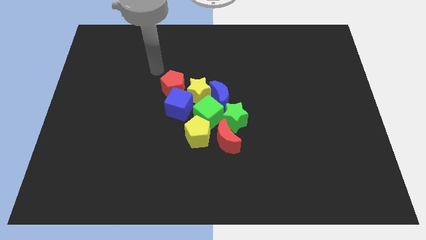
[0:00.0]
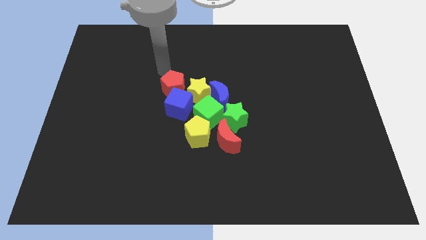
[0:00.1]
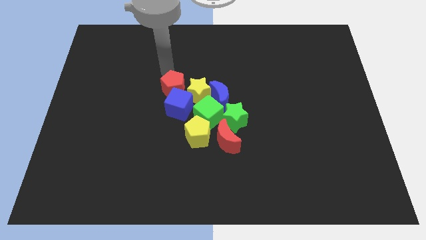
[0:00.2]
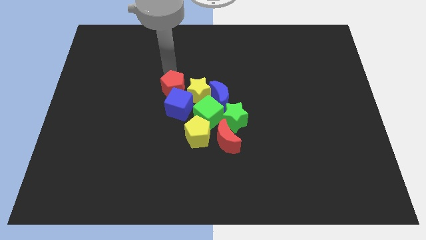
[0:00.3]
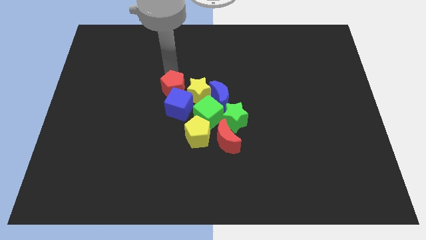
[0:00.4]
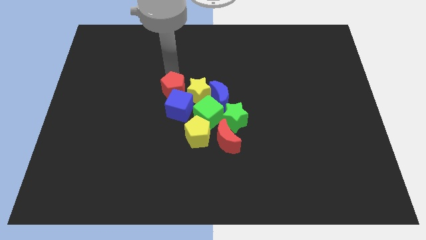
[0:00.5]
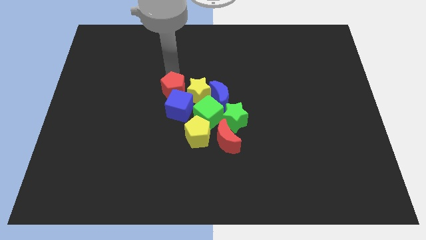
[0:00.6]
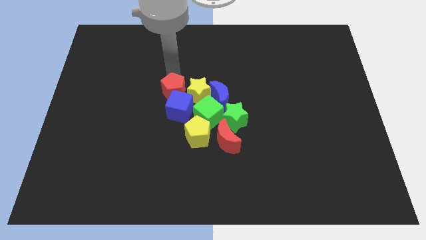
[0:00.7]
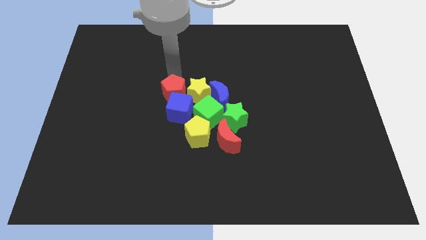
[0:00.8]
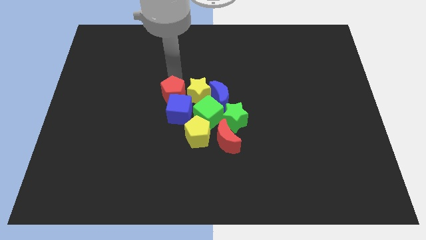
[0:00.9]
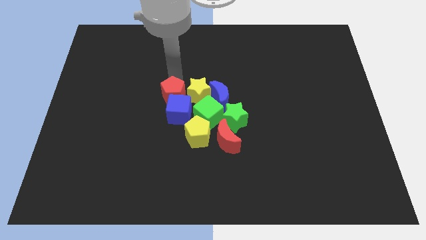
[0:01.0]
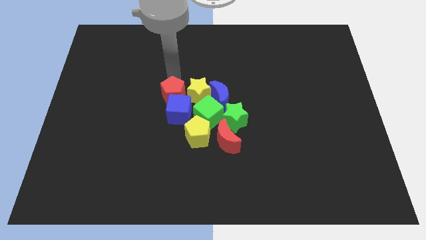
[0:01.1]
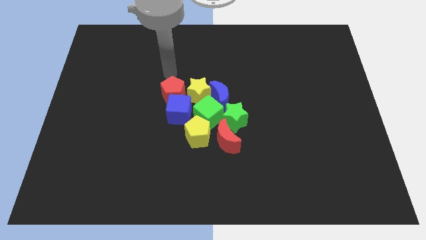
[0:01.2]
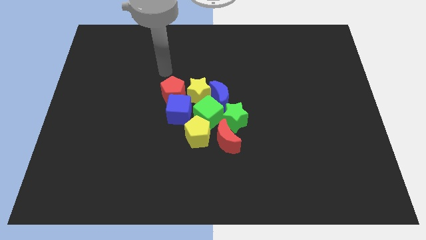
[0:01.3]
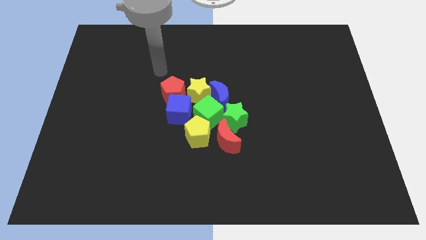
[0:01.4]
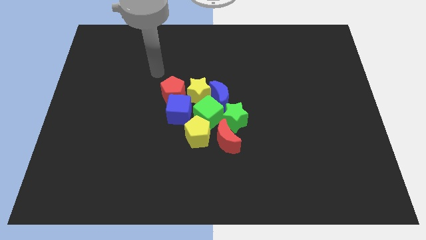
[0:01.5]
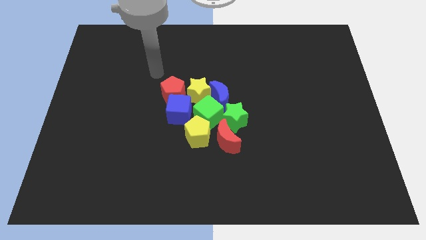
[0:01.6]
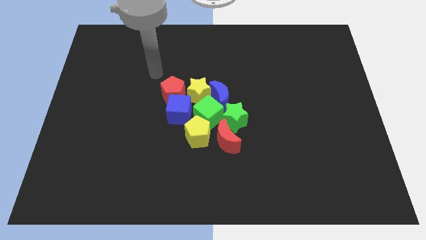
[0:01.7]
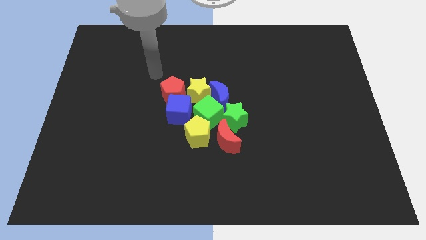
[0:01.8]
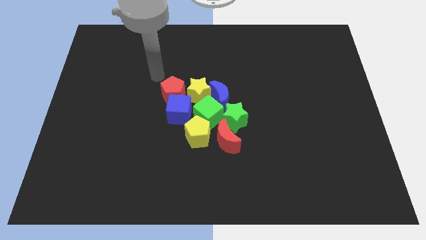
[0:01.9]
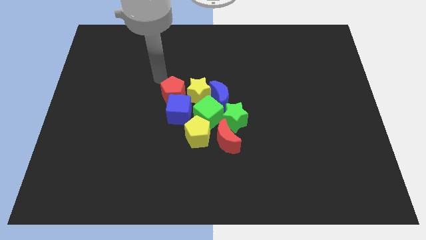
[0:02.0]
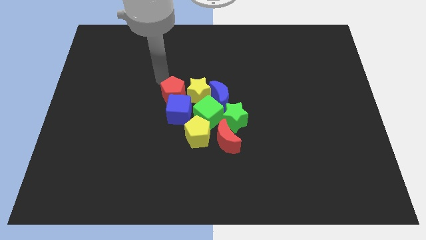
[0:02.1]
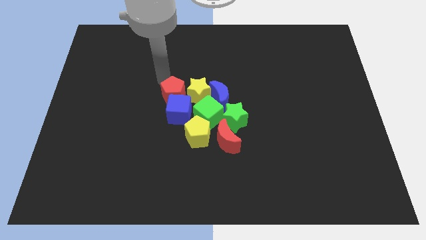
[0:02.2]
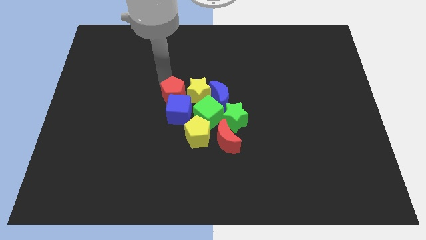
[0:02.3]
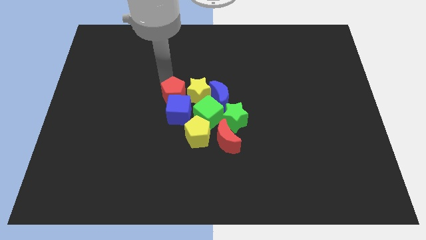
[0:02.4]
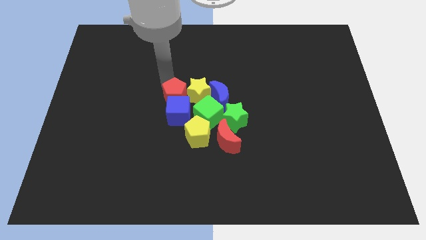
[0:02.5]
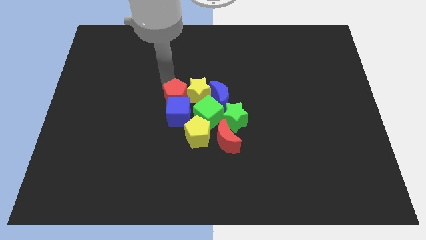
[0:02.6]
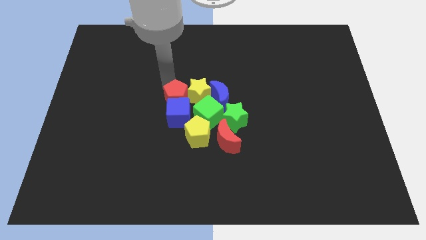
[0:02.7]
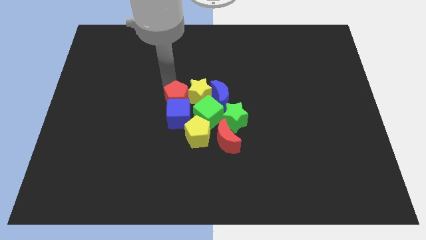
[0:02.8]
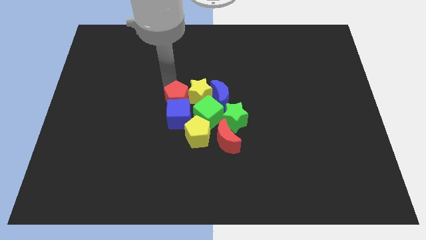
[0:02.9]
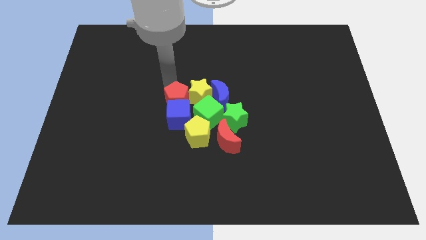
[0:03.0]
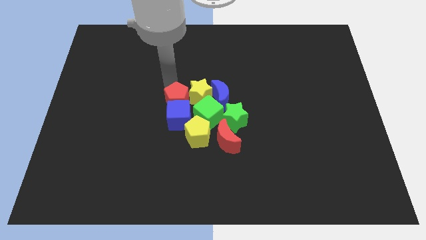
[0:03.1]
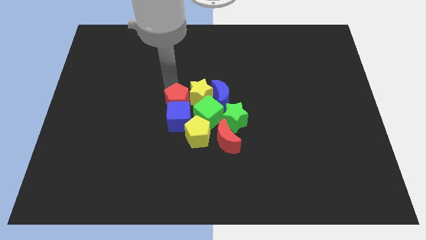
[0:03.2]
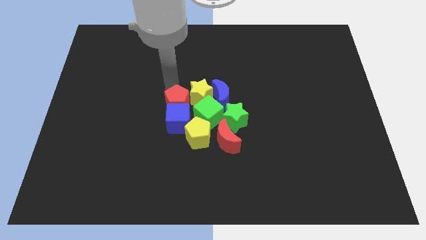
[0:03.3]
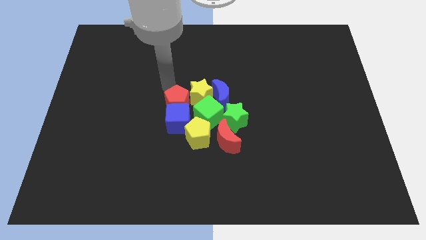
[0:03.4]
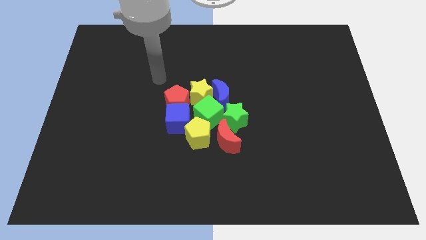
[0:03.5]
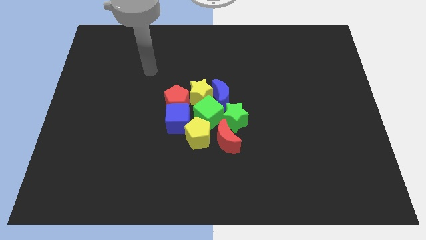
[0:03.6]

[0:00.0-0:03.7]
slightly move the red pentagon into the group of blocks

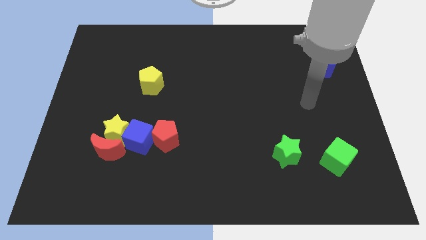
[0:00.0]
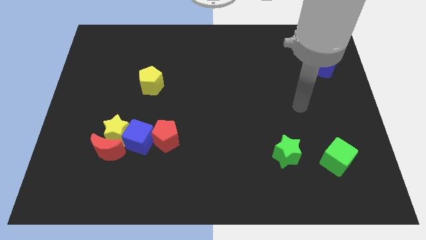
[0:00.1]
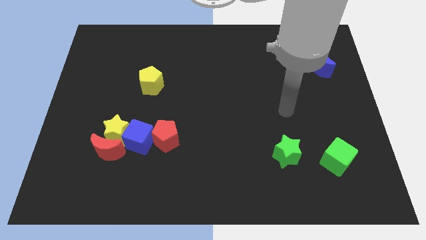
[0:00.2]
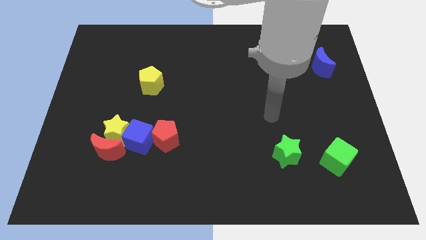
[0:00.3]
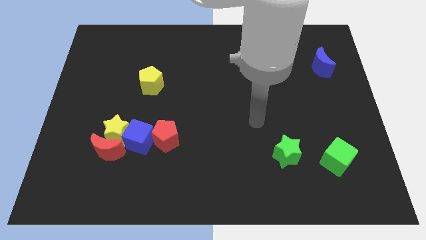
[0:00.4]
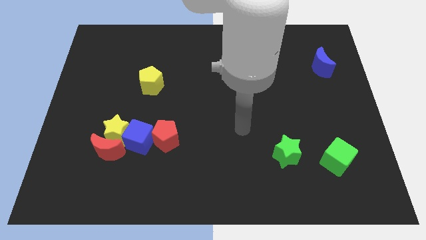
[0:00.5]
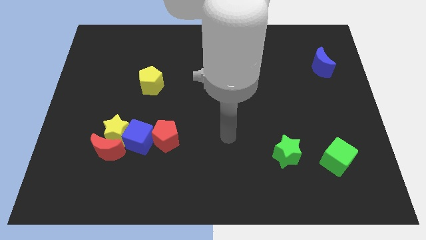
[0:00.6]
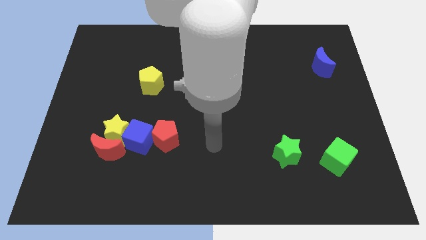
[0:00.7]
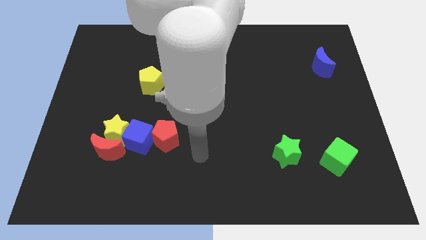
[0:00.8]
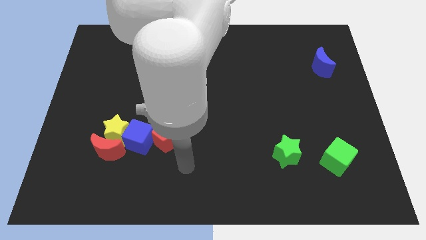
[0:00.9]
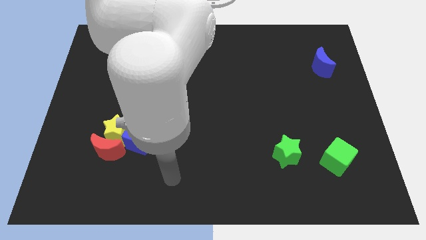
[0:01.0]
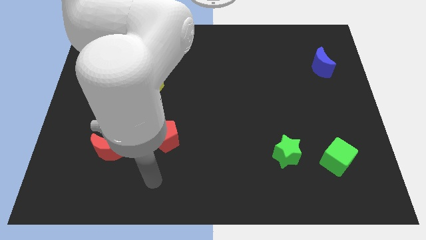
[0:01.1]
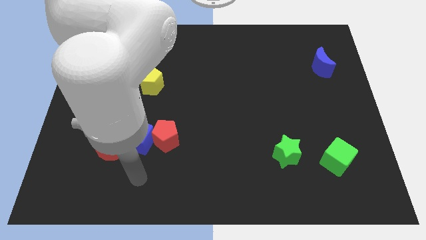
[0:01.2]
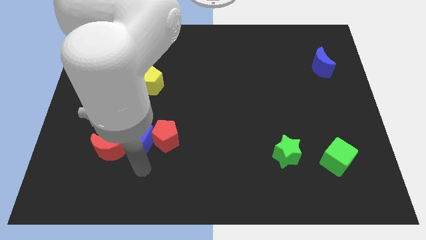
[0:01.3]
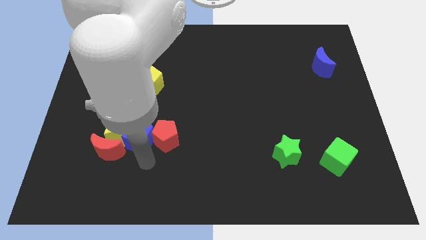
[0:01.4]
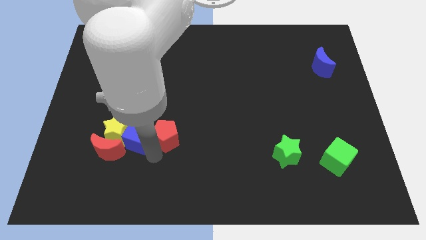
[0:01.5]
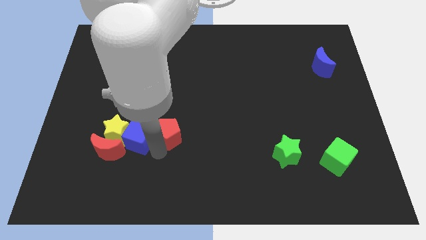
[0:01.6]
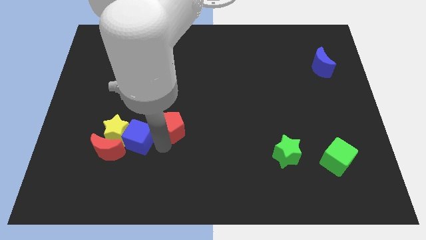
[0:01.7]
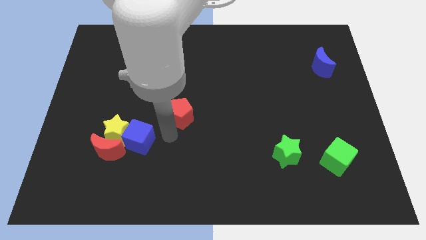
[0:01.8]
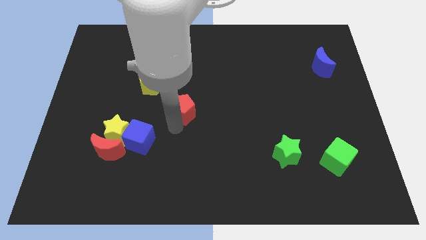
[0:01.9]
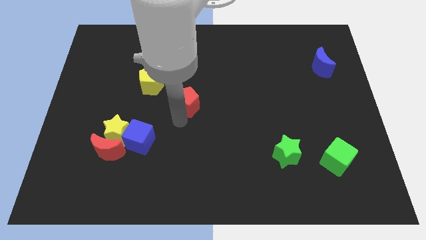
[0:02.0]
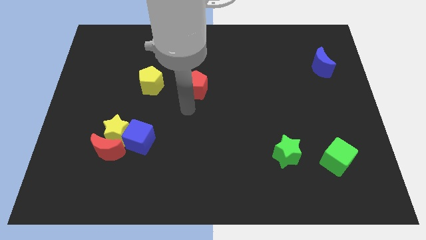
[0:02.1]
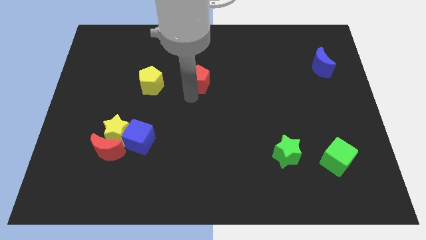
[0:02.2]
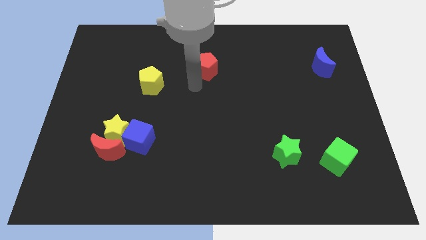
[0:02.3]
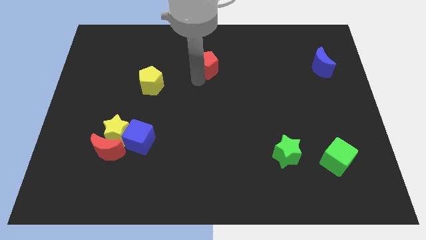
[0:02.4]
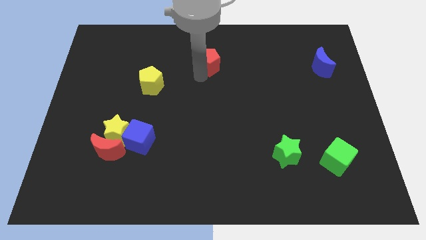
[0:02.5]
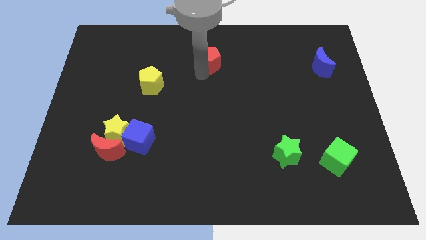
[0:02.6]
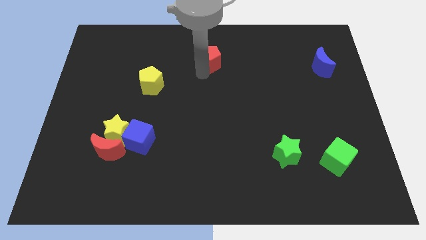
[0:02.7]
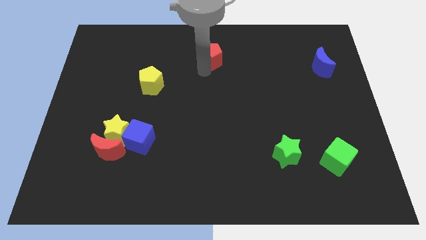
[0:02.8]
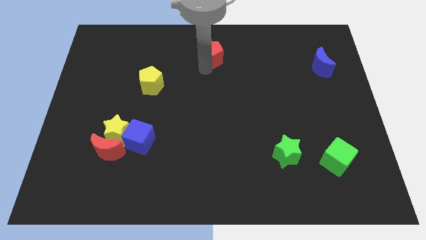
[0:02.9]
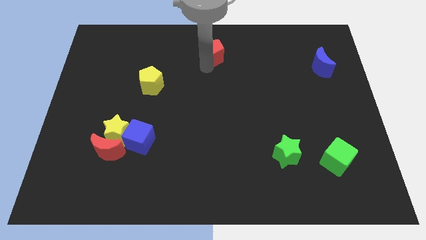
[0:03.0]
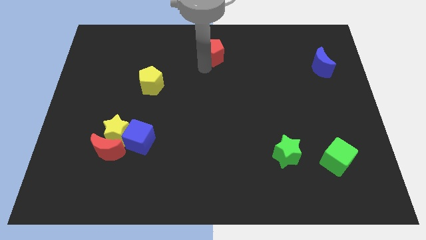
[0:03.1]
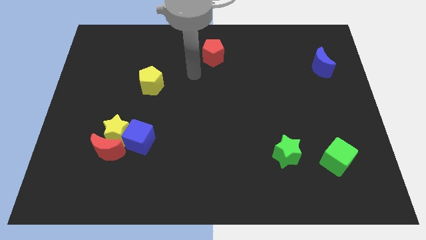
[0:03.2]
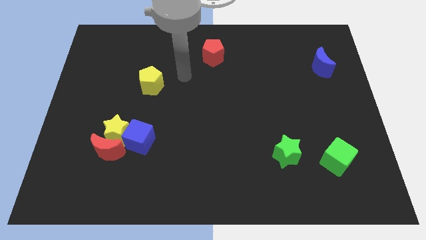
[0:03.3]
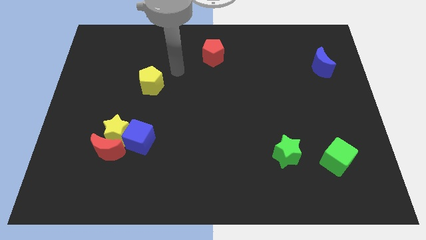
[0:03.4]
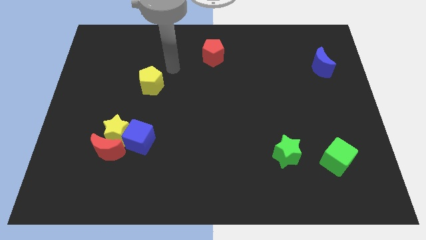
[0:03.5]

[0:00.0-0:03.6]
move the red pentagon towards the top center of the board

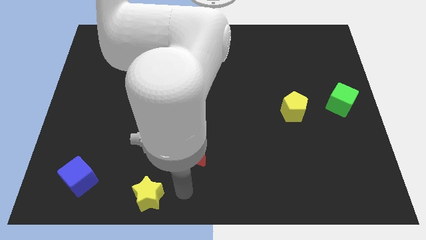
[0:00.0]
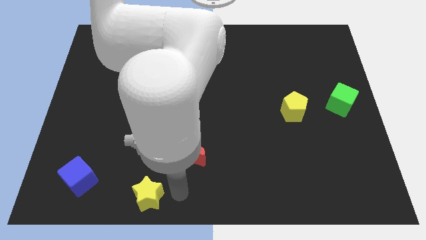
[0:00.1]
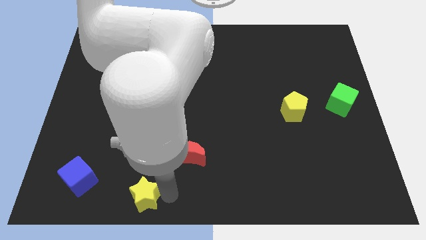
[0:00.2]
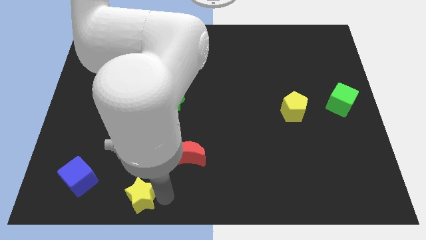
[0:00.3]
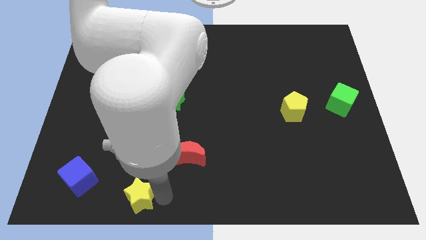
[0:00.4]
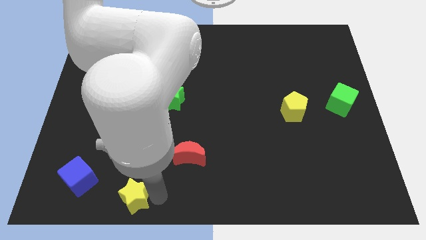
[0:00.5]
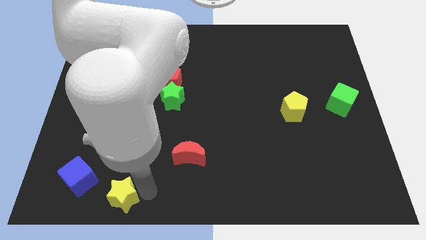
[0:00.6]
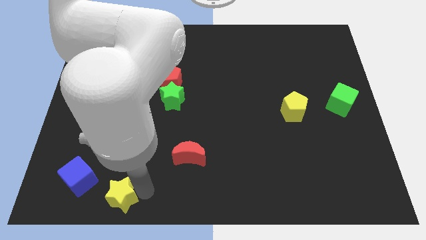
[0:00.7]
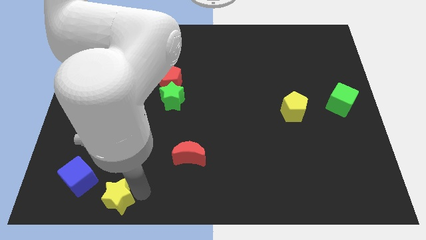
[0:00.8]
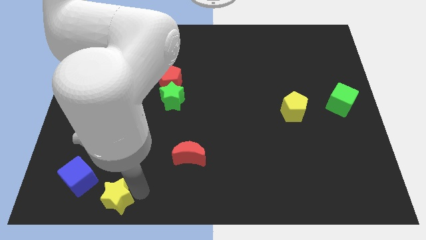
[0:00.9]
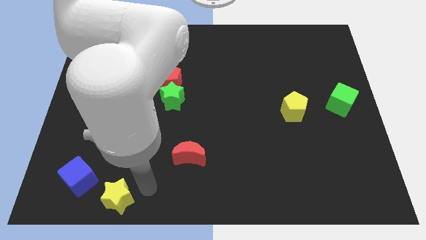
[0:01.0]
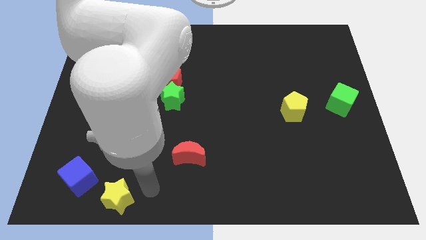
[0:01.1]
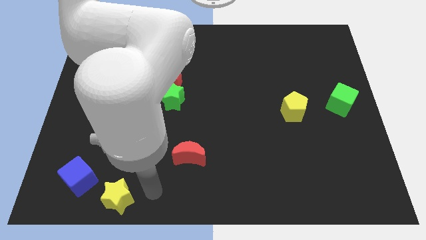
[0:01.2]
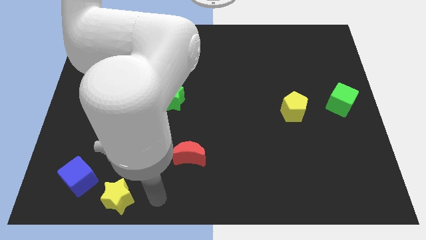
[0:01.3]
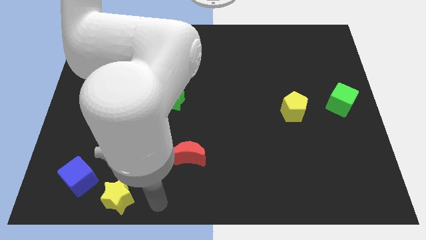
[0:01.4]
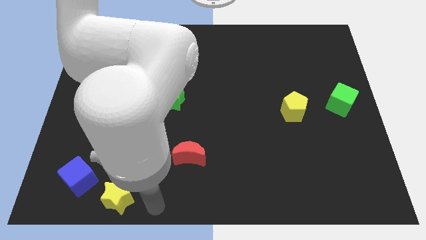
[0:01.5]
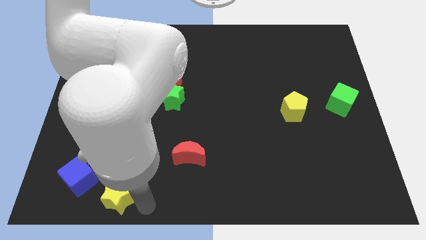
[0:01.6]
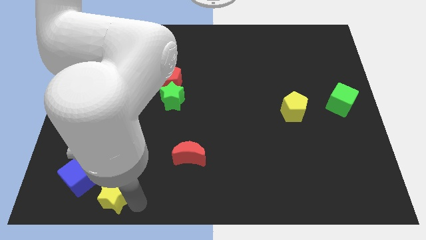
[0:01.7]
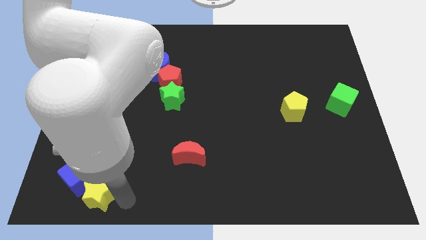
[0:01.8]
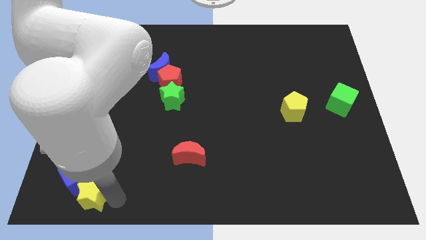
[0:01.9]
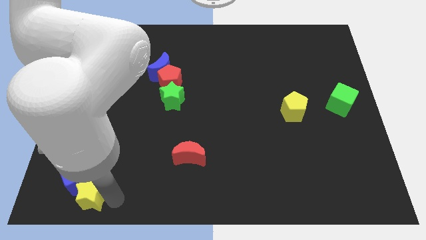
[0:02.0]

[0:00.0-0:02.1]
push yellow star into blue cube
